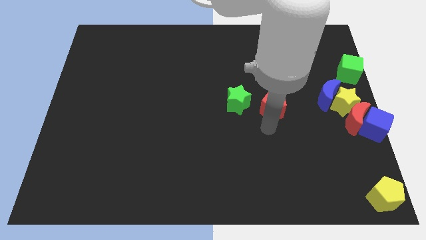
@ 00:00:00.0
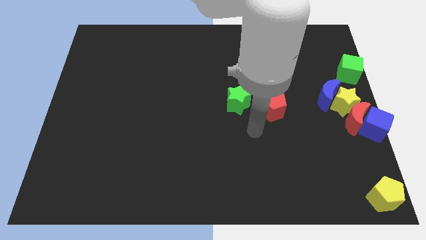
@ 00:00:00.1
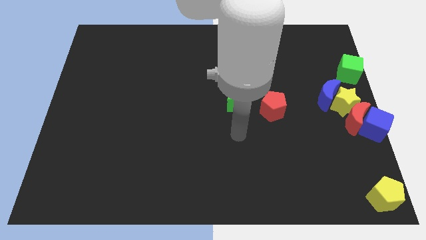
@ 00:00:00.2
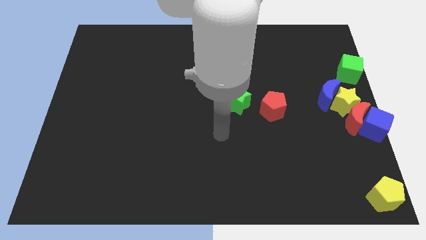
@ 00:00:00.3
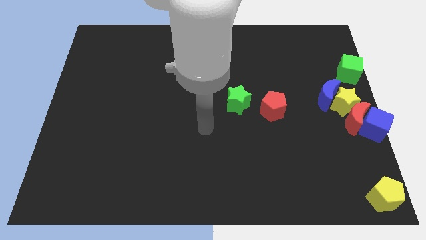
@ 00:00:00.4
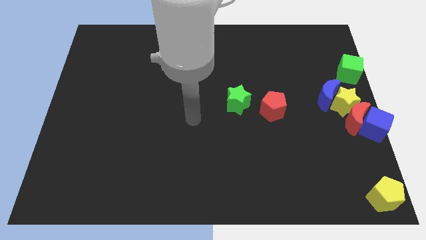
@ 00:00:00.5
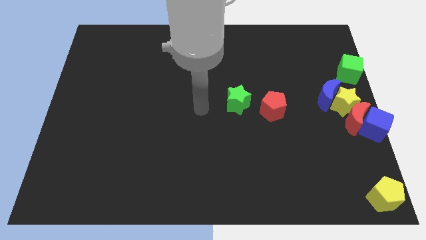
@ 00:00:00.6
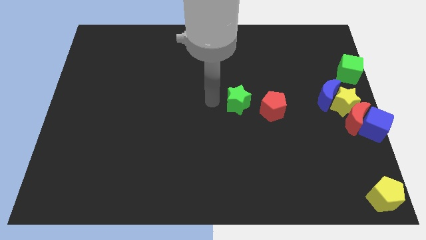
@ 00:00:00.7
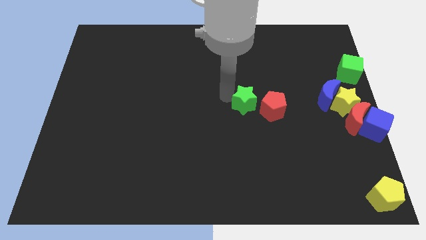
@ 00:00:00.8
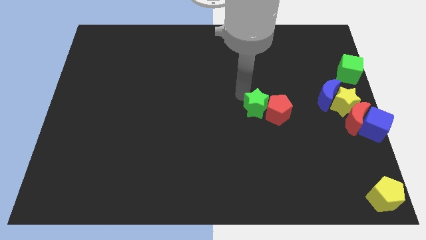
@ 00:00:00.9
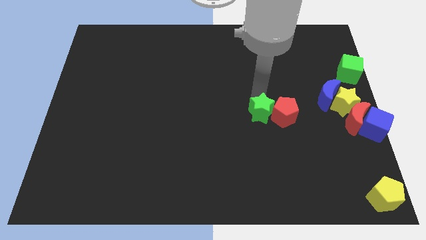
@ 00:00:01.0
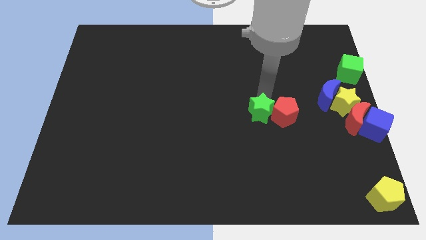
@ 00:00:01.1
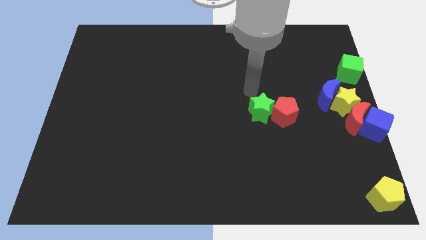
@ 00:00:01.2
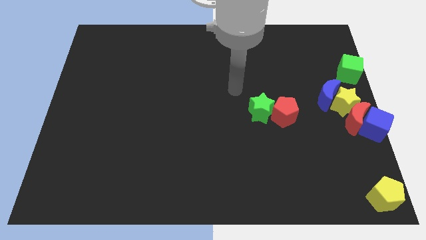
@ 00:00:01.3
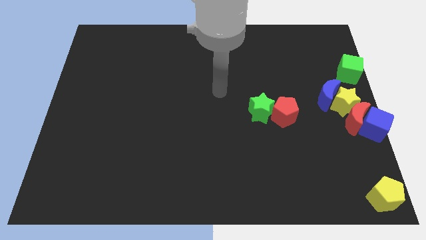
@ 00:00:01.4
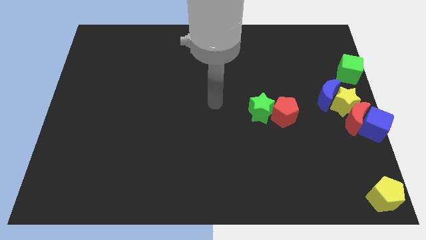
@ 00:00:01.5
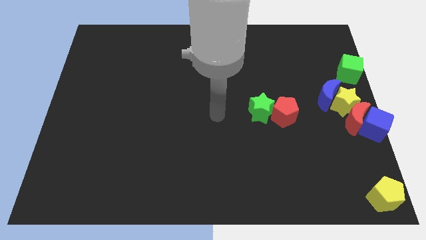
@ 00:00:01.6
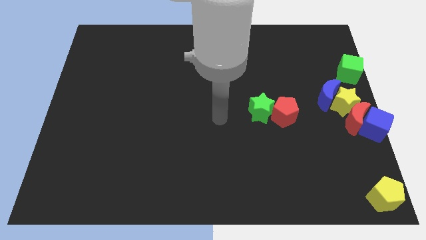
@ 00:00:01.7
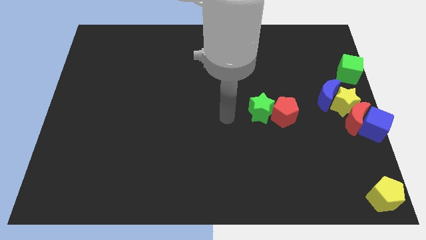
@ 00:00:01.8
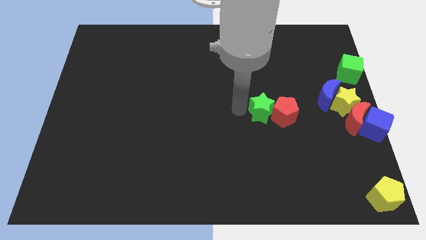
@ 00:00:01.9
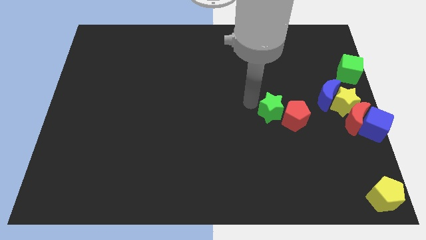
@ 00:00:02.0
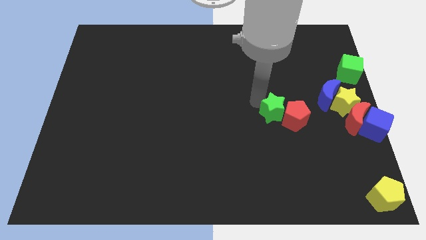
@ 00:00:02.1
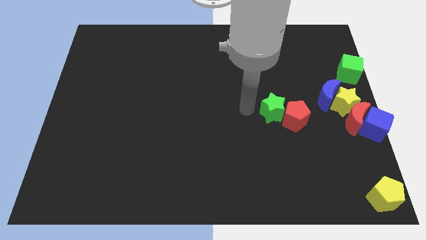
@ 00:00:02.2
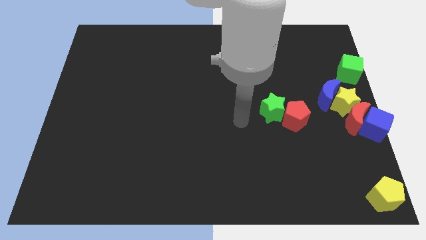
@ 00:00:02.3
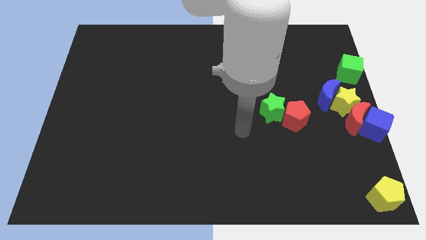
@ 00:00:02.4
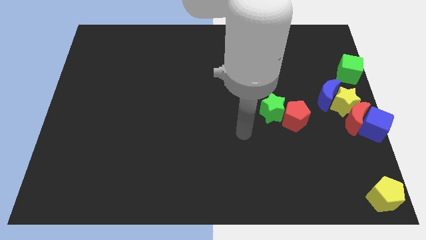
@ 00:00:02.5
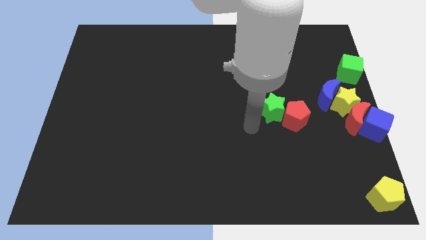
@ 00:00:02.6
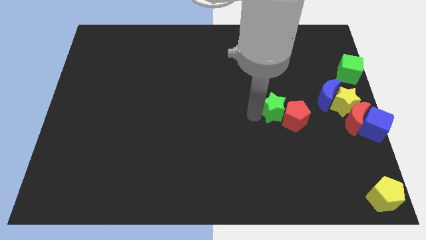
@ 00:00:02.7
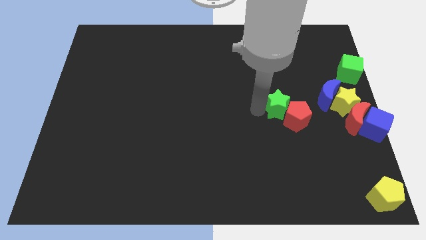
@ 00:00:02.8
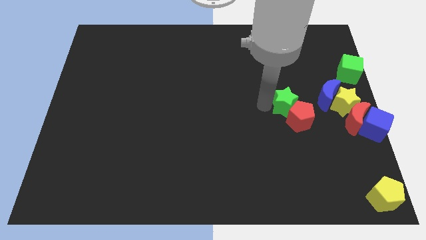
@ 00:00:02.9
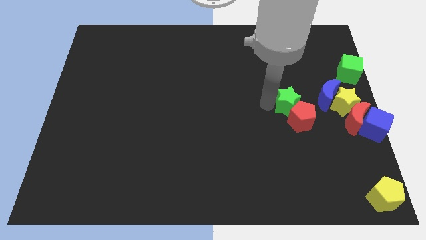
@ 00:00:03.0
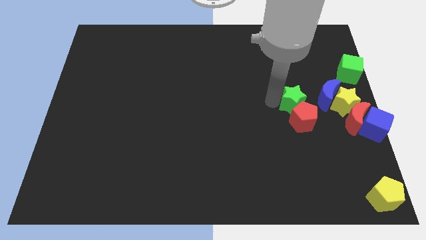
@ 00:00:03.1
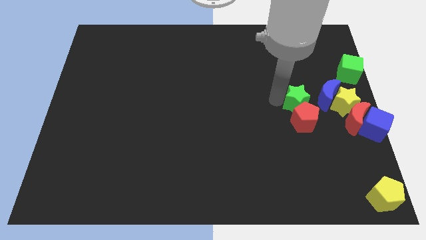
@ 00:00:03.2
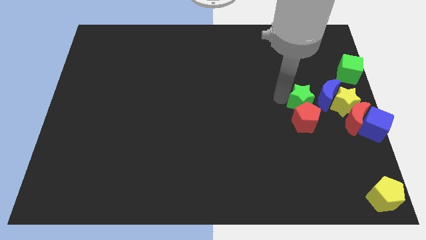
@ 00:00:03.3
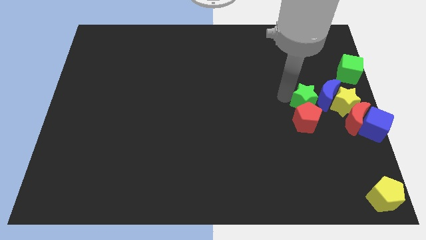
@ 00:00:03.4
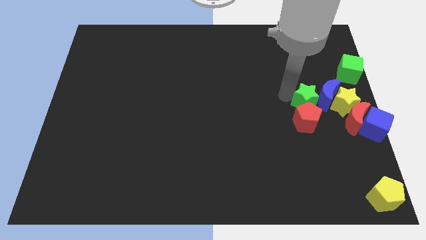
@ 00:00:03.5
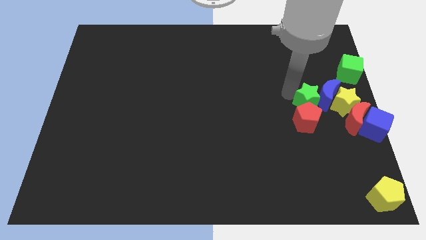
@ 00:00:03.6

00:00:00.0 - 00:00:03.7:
push the green star along with the red pentagon left to the blue crescent

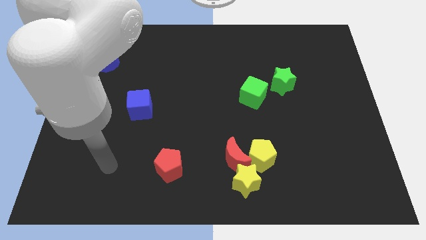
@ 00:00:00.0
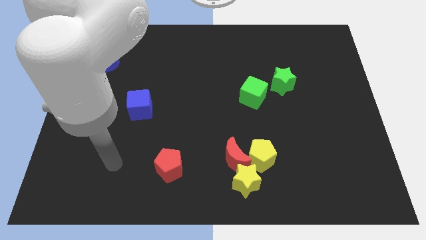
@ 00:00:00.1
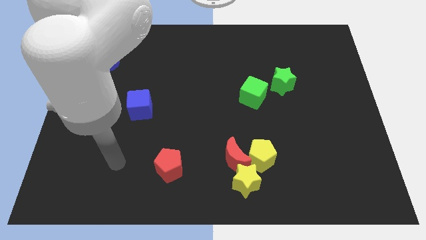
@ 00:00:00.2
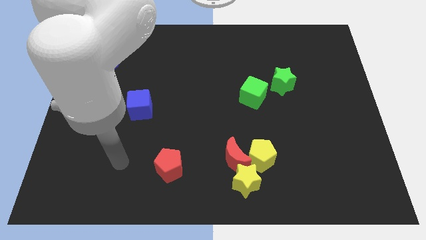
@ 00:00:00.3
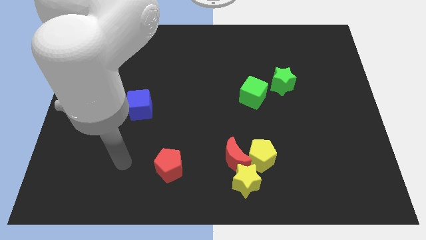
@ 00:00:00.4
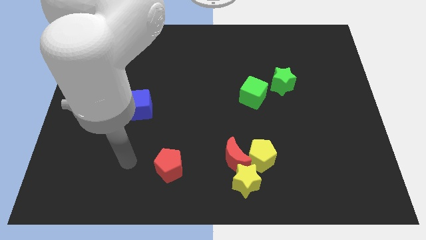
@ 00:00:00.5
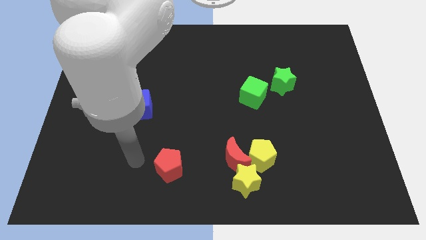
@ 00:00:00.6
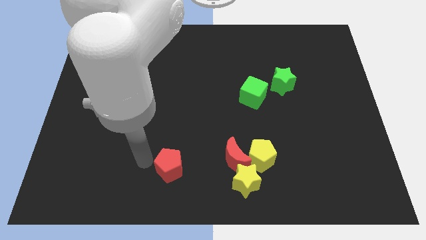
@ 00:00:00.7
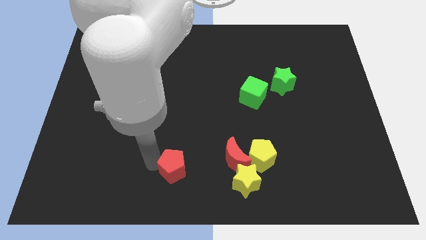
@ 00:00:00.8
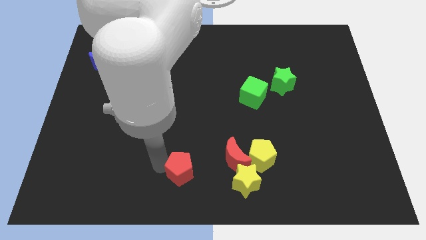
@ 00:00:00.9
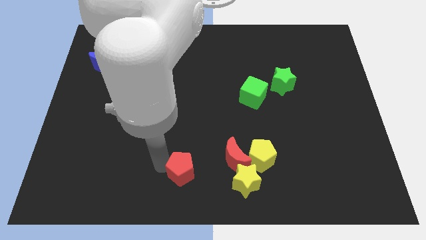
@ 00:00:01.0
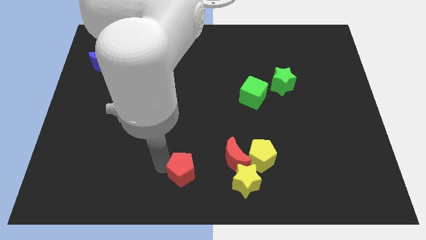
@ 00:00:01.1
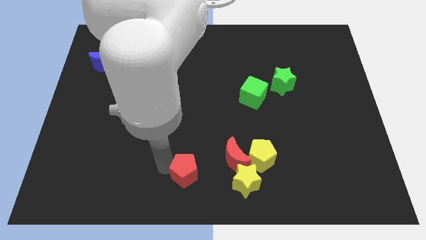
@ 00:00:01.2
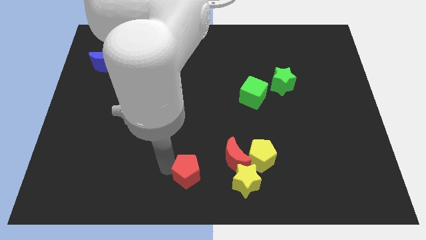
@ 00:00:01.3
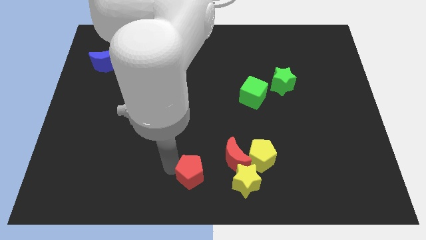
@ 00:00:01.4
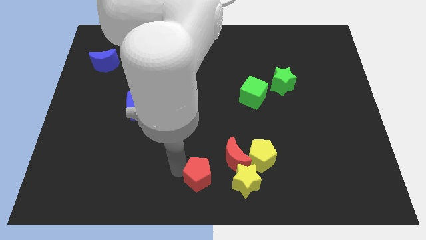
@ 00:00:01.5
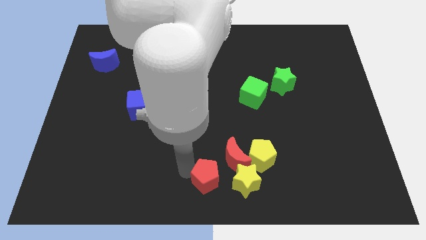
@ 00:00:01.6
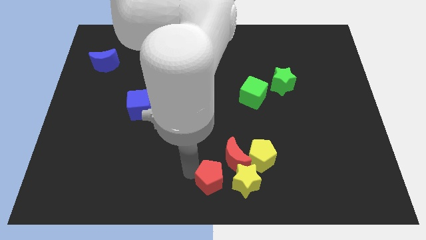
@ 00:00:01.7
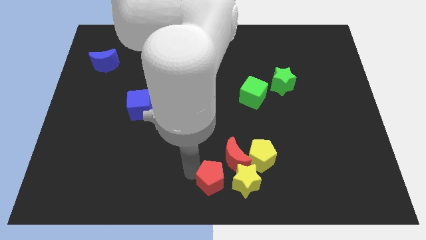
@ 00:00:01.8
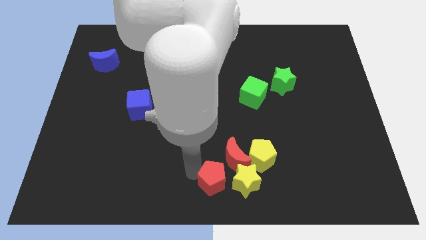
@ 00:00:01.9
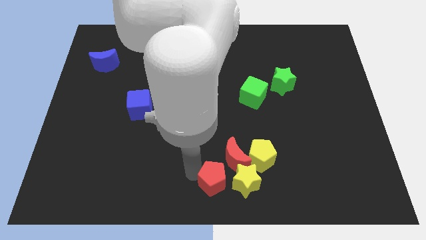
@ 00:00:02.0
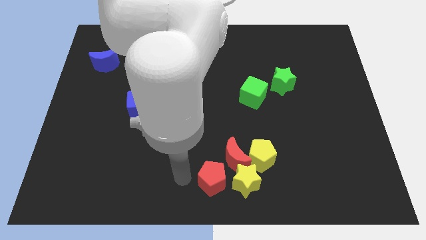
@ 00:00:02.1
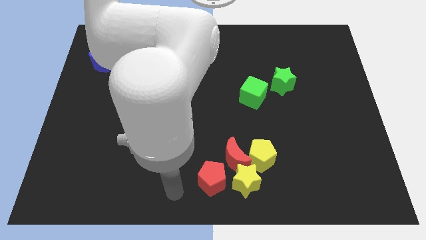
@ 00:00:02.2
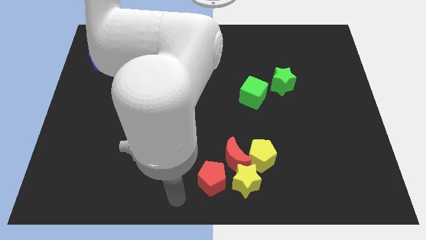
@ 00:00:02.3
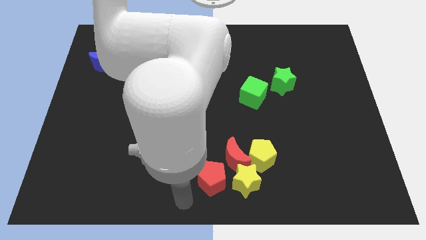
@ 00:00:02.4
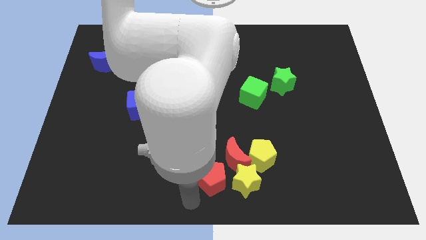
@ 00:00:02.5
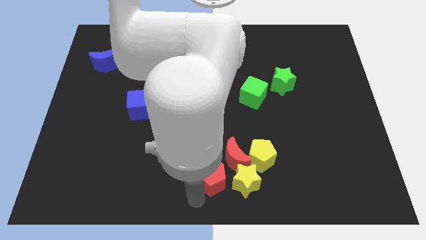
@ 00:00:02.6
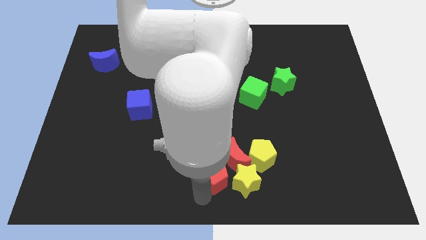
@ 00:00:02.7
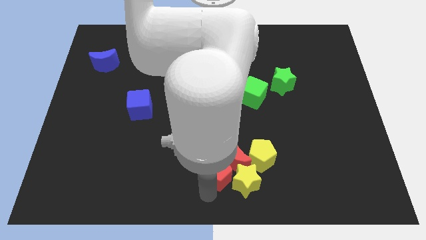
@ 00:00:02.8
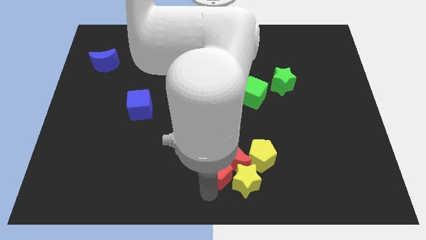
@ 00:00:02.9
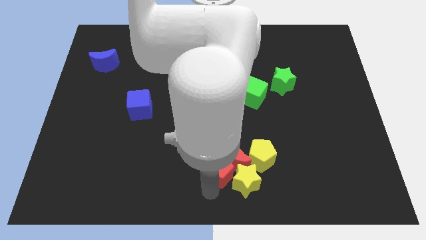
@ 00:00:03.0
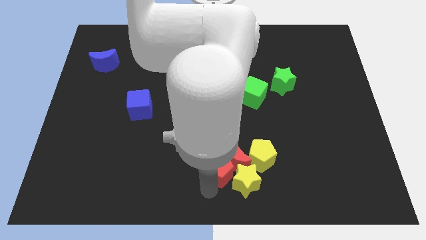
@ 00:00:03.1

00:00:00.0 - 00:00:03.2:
move the red pentagon into the red moon

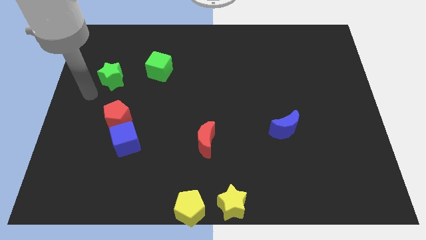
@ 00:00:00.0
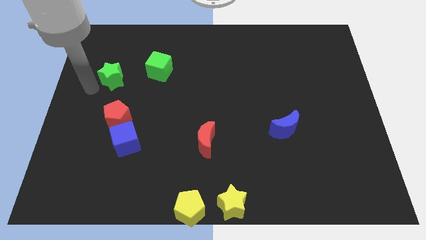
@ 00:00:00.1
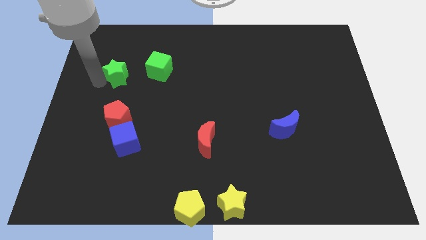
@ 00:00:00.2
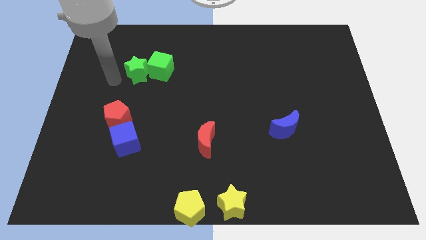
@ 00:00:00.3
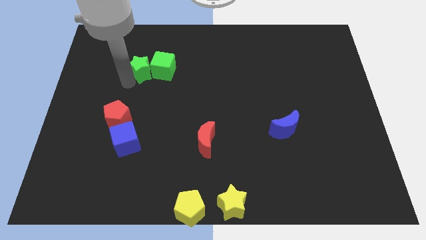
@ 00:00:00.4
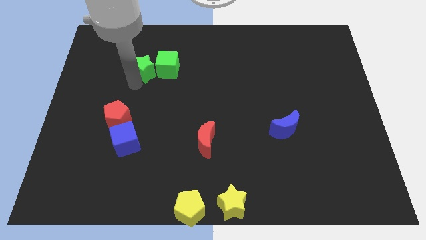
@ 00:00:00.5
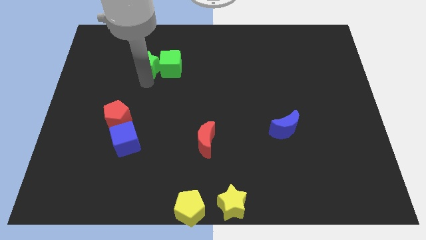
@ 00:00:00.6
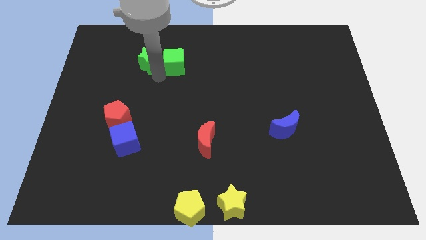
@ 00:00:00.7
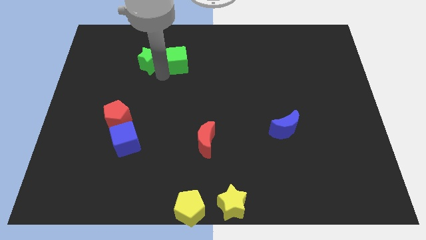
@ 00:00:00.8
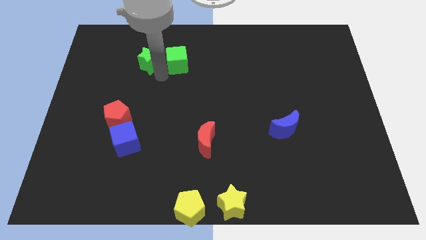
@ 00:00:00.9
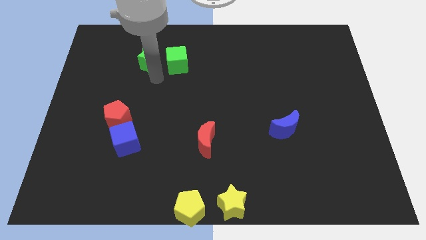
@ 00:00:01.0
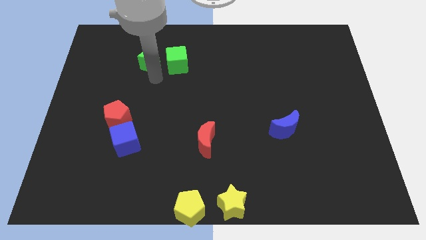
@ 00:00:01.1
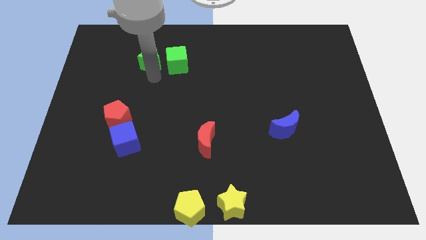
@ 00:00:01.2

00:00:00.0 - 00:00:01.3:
push green star into green cube

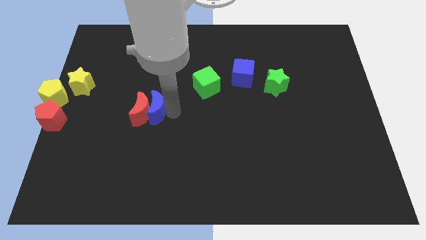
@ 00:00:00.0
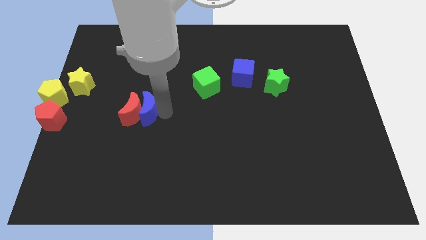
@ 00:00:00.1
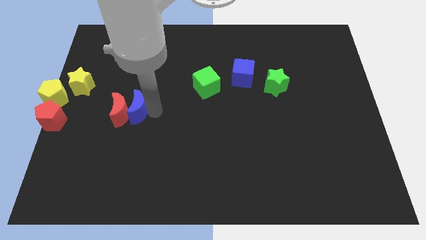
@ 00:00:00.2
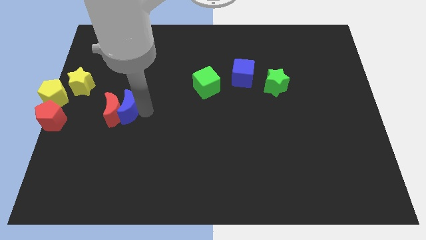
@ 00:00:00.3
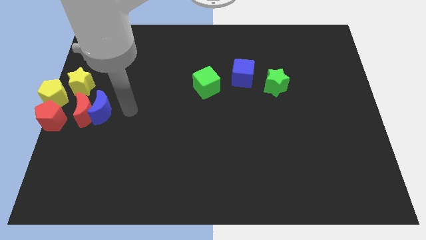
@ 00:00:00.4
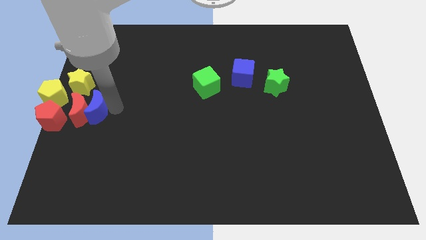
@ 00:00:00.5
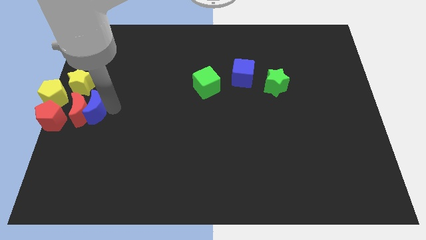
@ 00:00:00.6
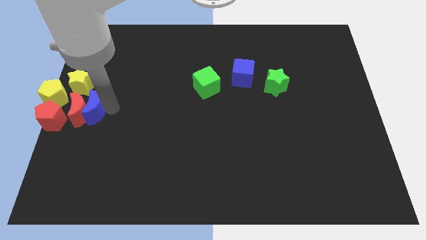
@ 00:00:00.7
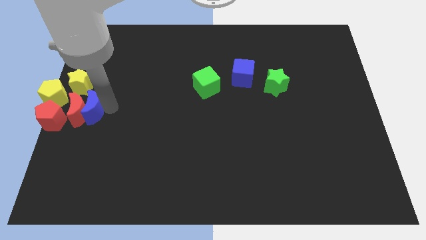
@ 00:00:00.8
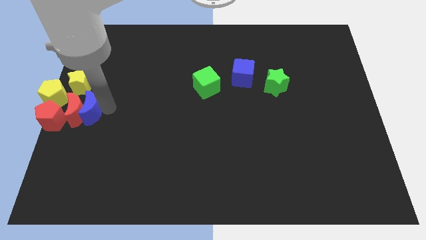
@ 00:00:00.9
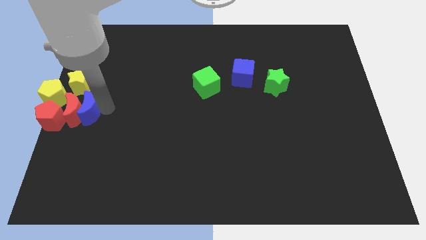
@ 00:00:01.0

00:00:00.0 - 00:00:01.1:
push the moons towards the red pentagon
